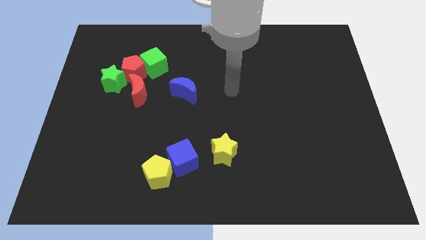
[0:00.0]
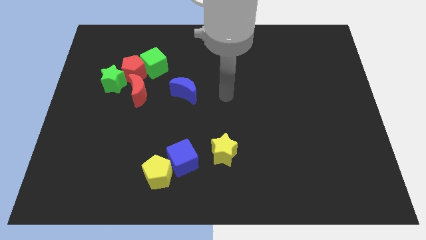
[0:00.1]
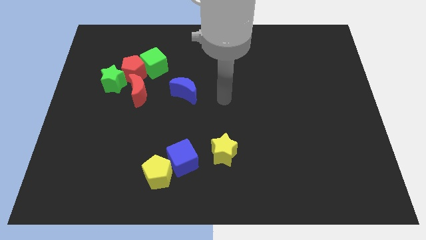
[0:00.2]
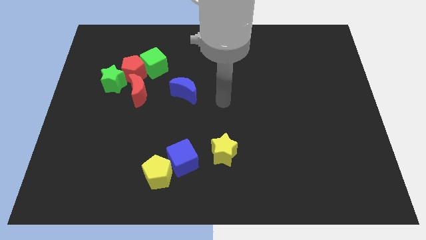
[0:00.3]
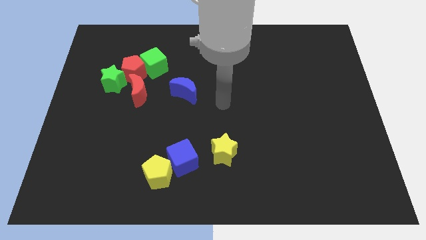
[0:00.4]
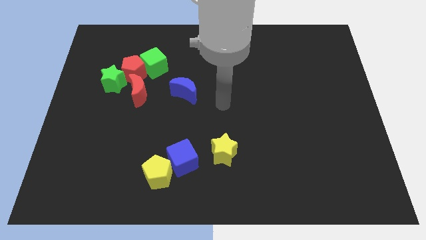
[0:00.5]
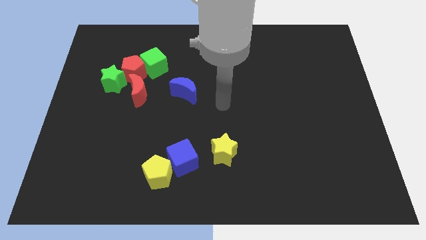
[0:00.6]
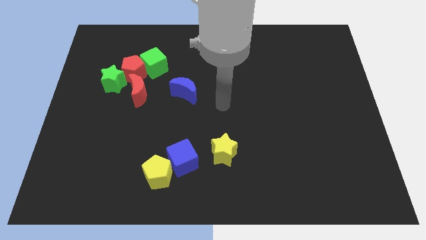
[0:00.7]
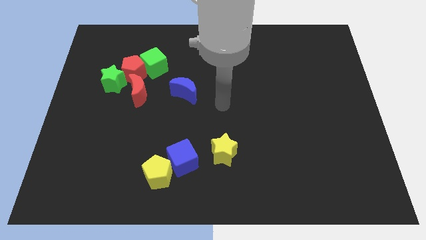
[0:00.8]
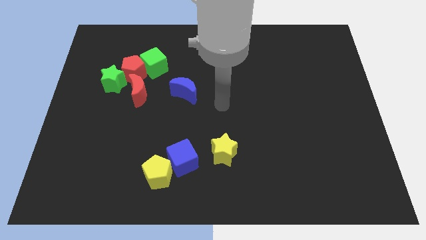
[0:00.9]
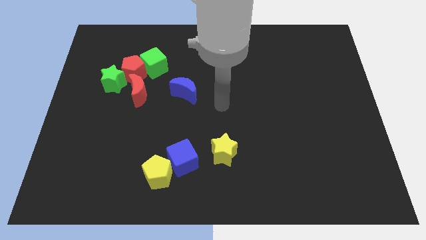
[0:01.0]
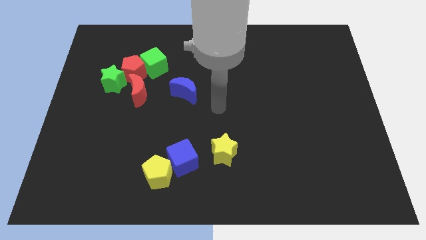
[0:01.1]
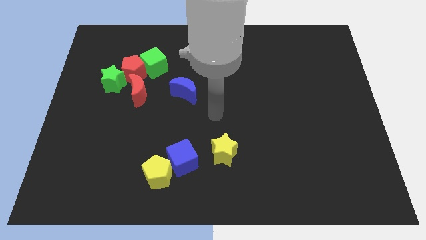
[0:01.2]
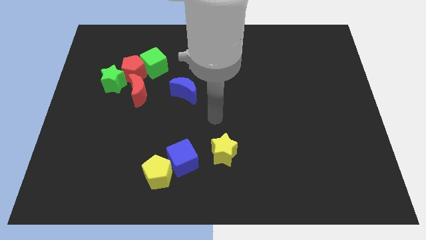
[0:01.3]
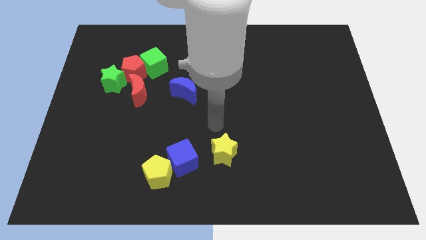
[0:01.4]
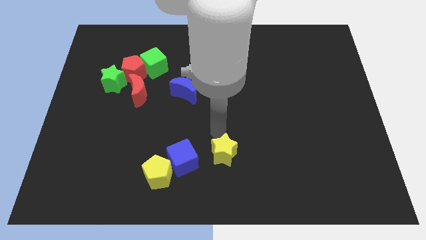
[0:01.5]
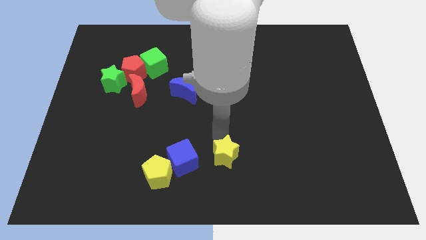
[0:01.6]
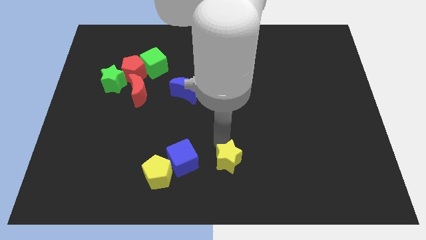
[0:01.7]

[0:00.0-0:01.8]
touch the yellow star

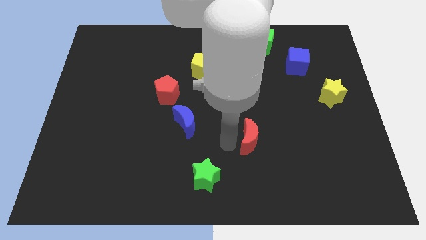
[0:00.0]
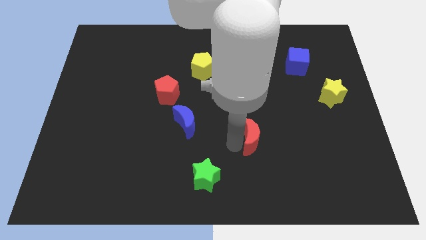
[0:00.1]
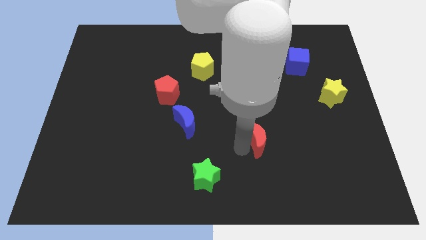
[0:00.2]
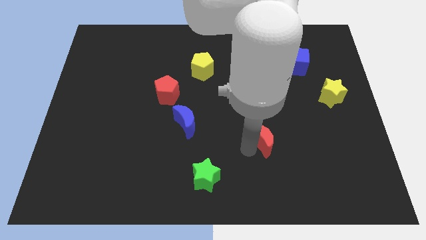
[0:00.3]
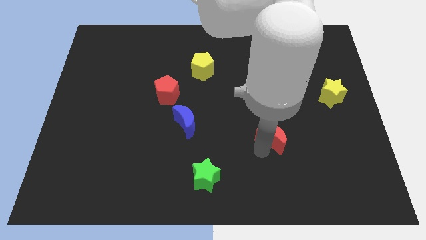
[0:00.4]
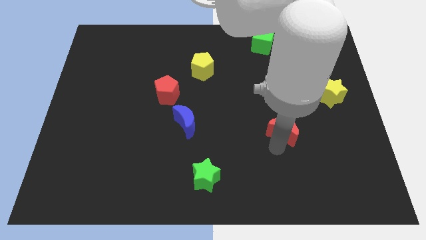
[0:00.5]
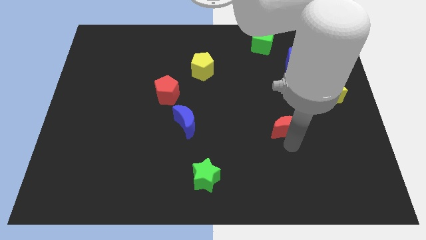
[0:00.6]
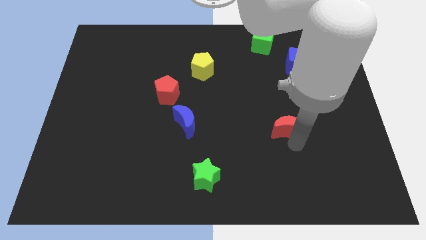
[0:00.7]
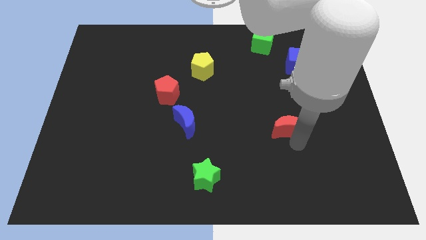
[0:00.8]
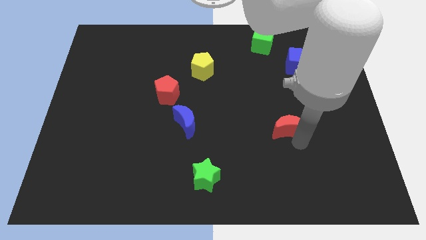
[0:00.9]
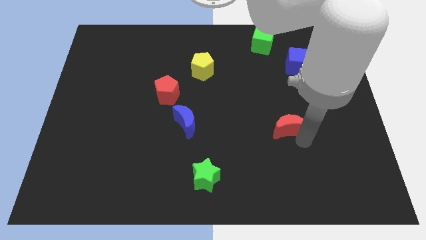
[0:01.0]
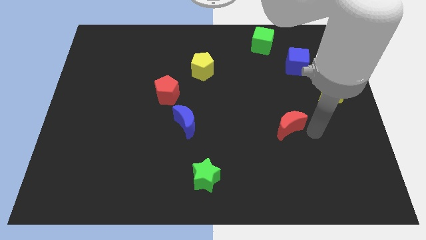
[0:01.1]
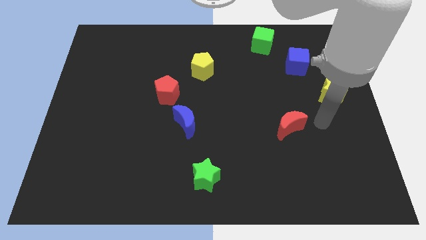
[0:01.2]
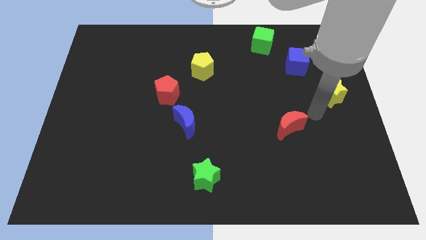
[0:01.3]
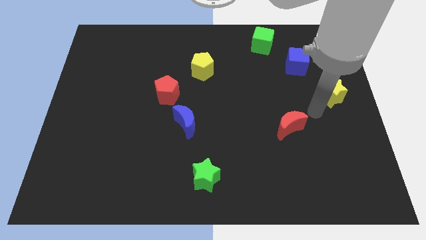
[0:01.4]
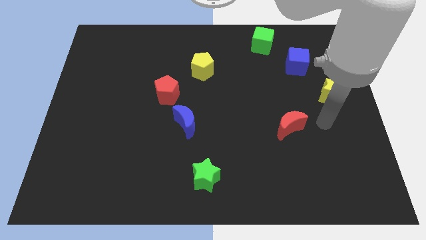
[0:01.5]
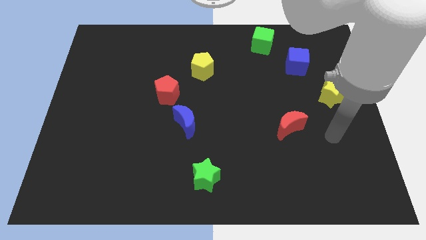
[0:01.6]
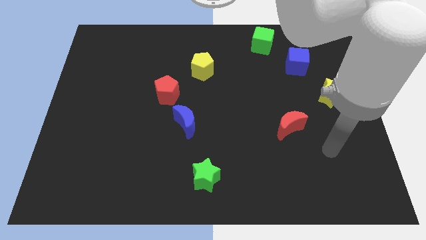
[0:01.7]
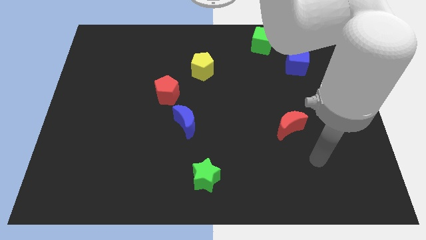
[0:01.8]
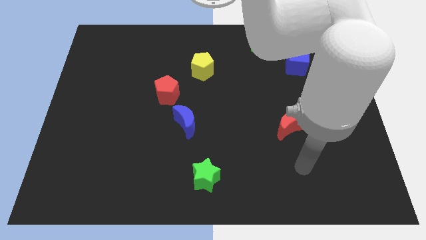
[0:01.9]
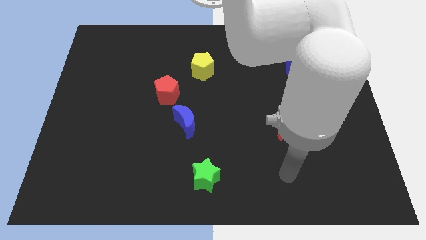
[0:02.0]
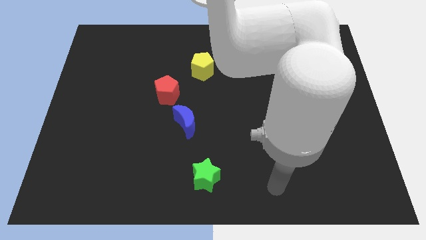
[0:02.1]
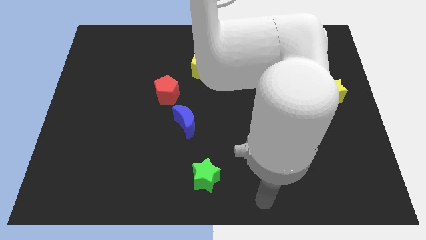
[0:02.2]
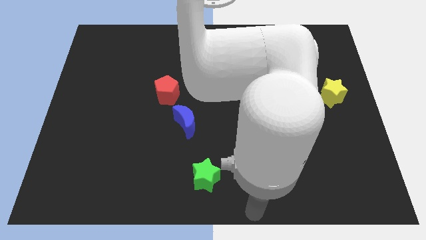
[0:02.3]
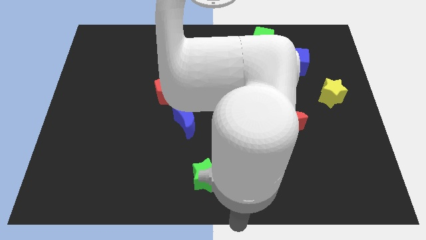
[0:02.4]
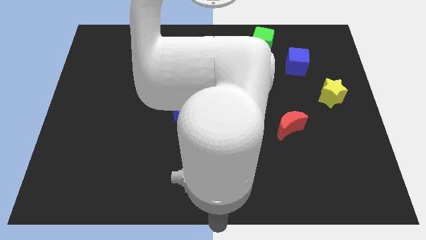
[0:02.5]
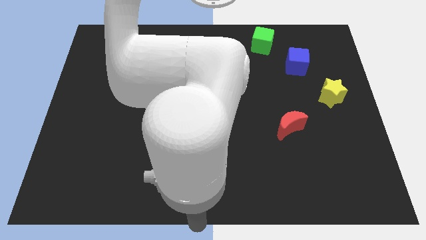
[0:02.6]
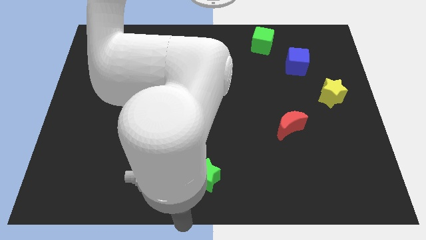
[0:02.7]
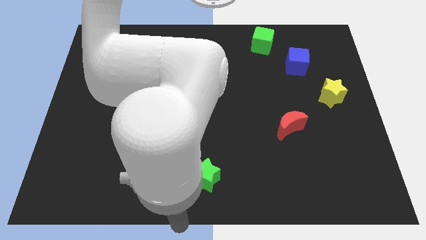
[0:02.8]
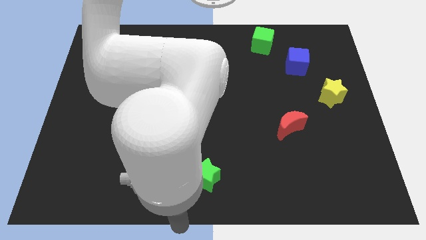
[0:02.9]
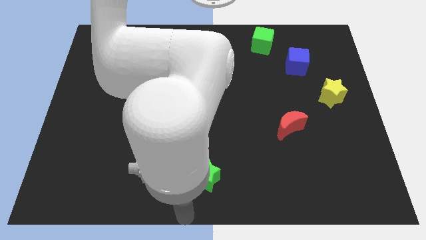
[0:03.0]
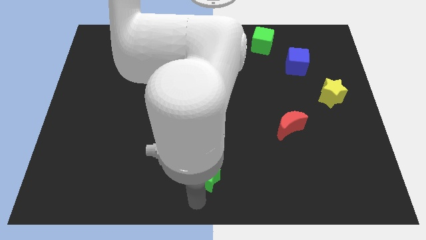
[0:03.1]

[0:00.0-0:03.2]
push the red crescent diagonally to the bottom left of the yellow star

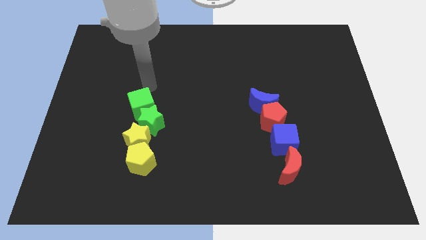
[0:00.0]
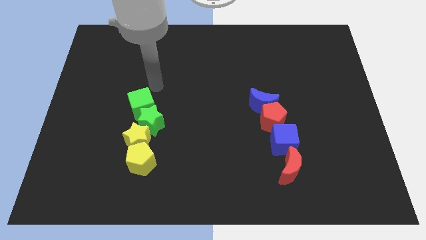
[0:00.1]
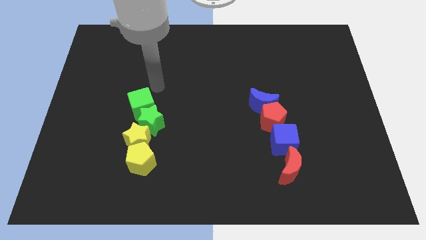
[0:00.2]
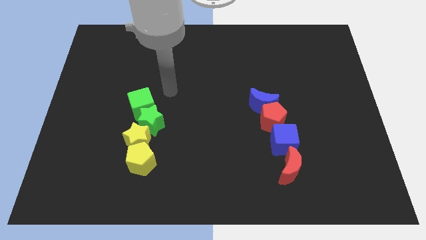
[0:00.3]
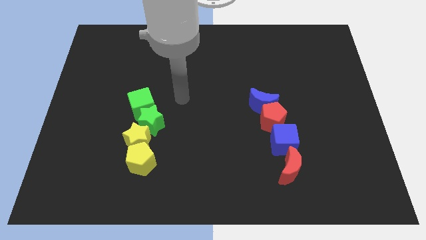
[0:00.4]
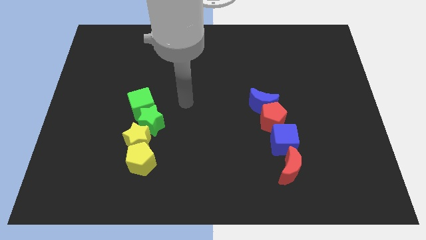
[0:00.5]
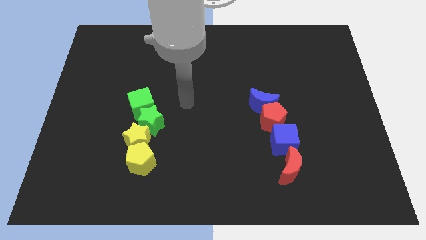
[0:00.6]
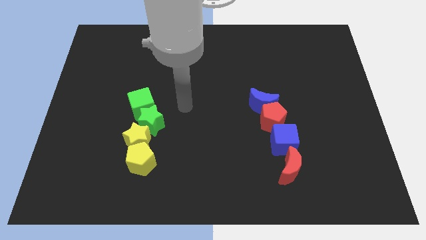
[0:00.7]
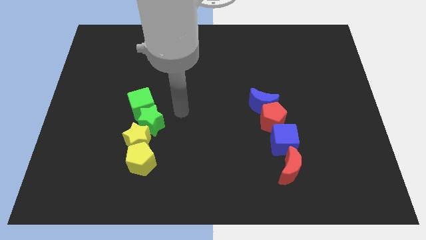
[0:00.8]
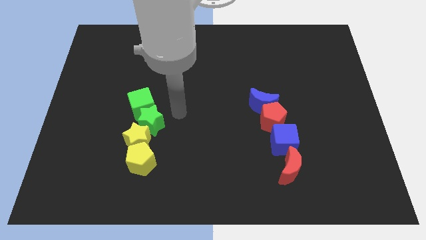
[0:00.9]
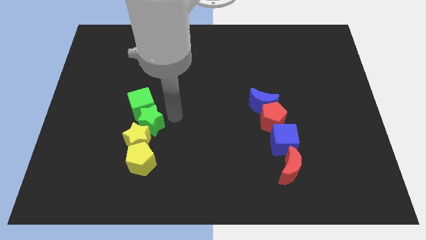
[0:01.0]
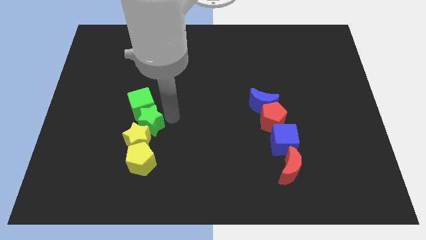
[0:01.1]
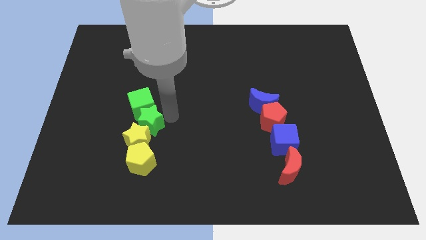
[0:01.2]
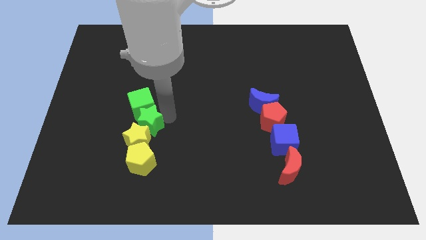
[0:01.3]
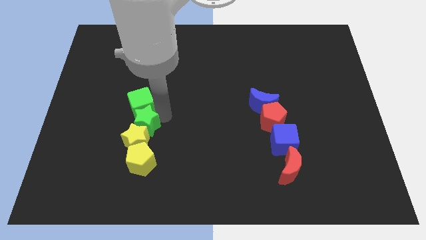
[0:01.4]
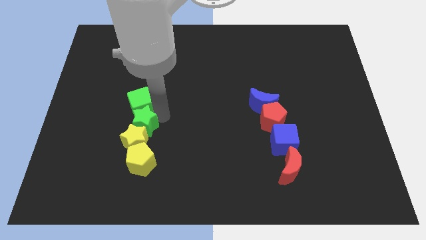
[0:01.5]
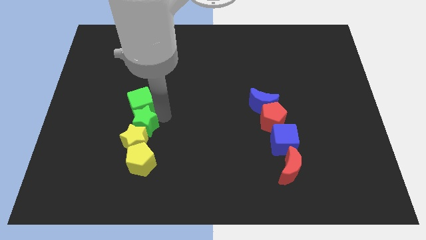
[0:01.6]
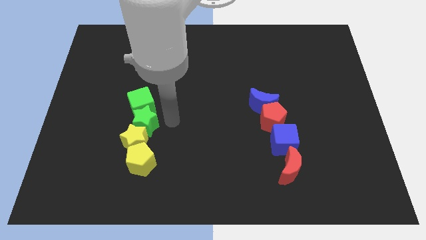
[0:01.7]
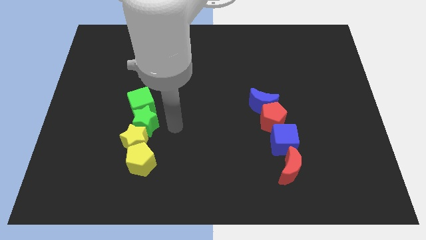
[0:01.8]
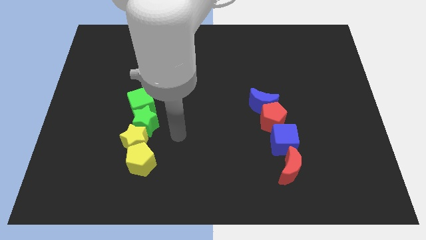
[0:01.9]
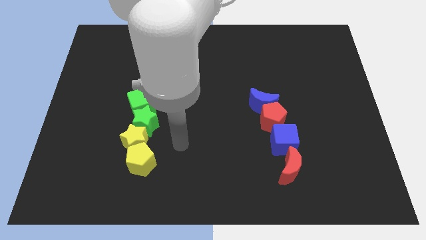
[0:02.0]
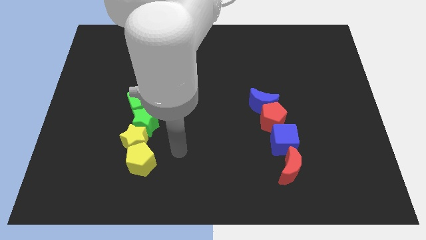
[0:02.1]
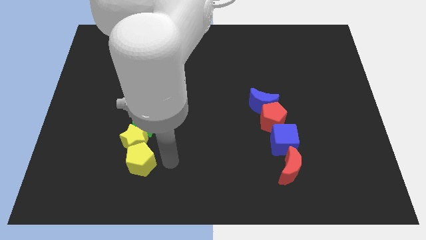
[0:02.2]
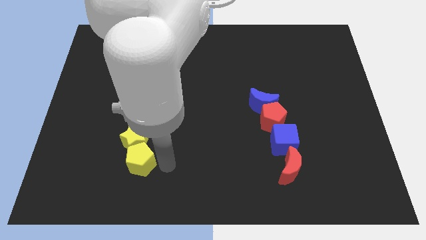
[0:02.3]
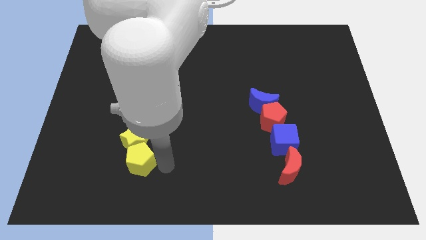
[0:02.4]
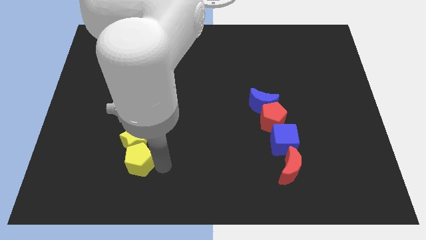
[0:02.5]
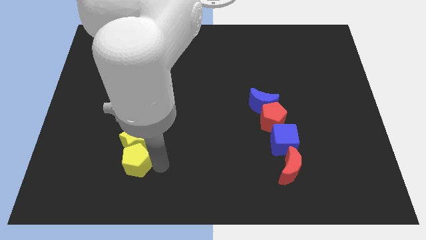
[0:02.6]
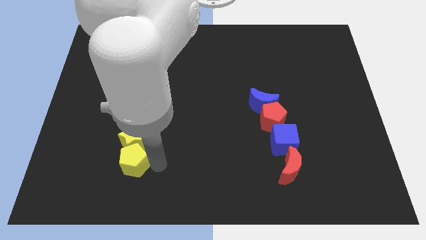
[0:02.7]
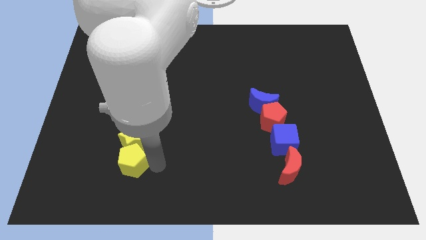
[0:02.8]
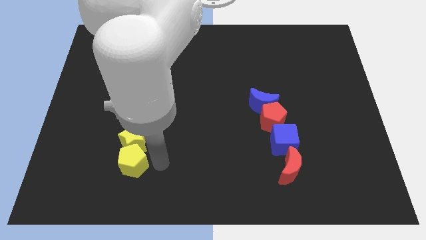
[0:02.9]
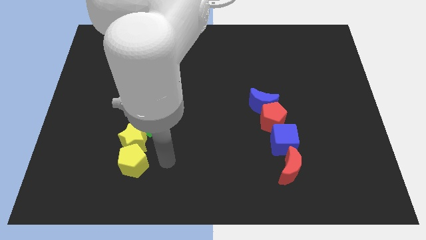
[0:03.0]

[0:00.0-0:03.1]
line up the green and yellow blocks in a line vertically

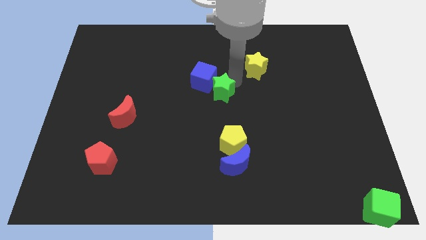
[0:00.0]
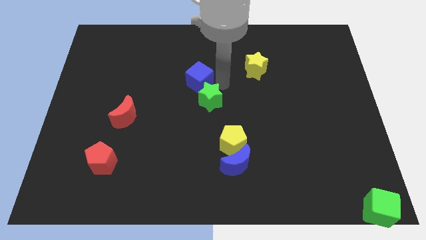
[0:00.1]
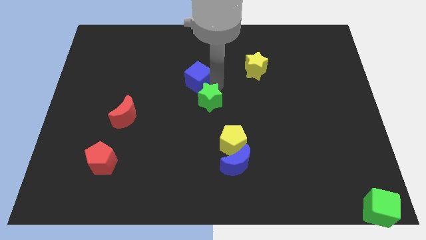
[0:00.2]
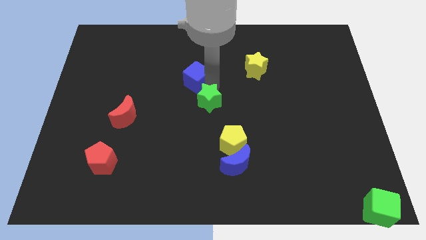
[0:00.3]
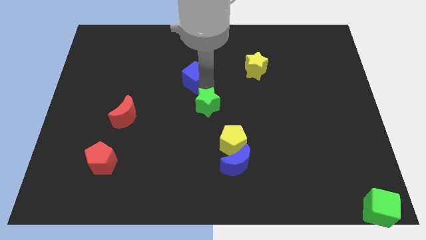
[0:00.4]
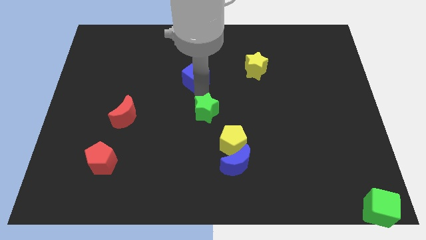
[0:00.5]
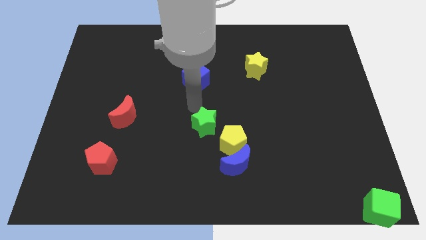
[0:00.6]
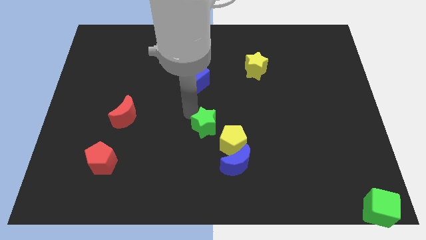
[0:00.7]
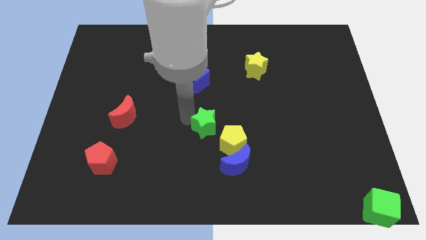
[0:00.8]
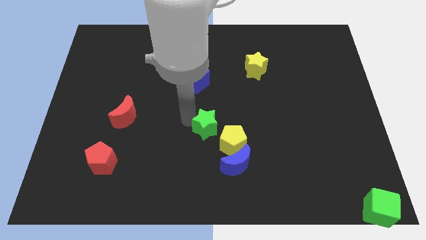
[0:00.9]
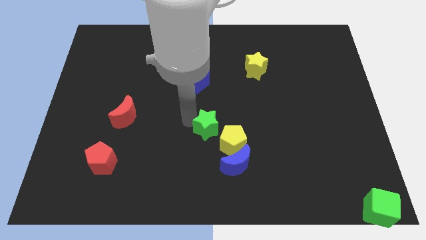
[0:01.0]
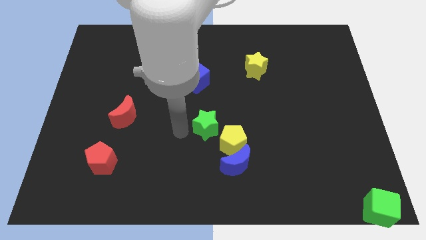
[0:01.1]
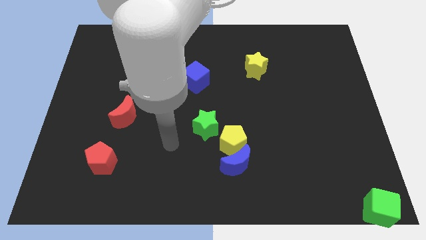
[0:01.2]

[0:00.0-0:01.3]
put the green star at the top left of the yellow pentagon
